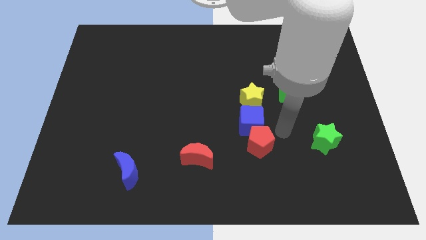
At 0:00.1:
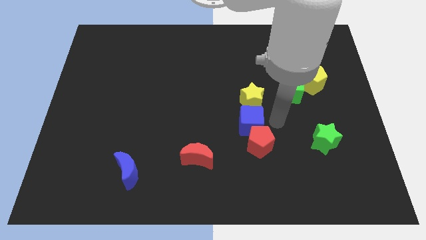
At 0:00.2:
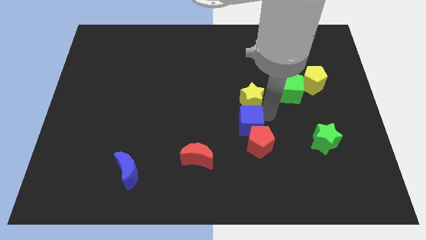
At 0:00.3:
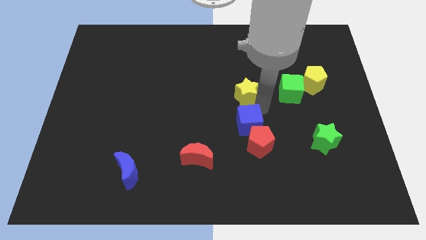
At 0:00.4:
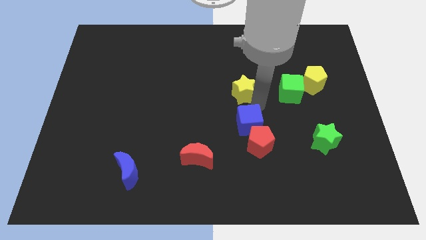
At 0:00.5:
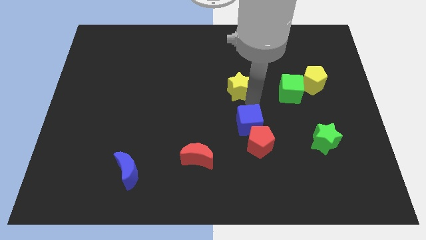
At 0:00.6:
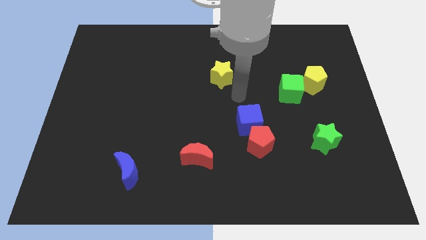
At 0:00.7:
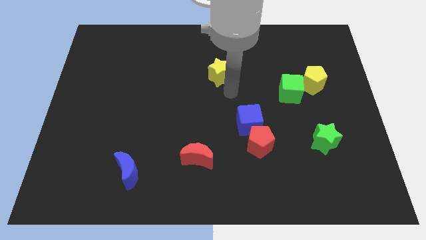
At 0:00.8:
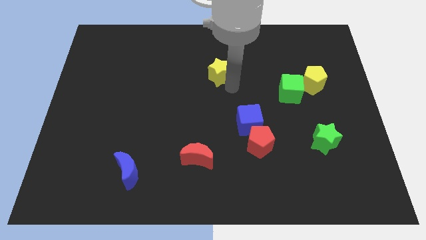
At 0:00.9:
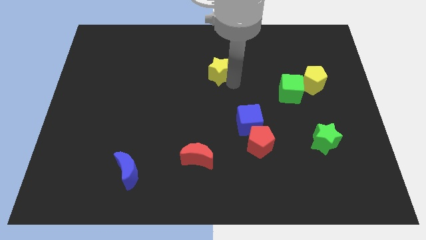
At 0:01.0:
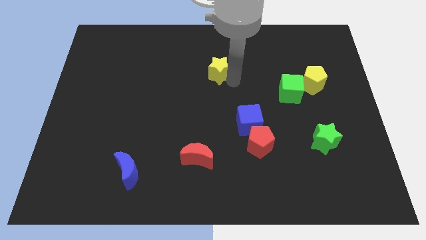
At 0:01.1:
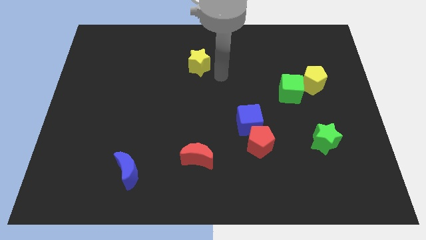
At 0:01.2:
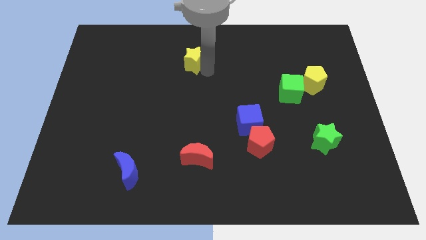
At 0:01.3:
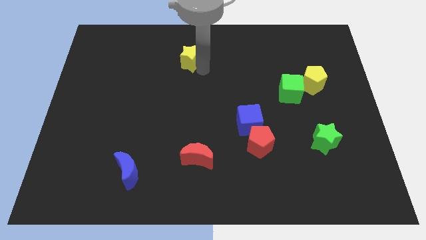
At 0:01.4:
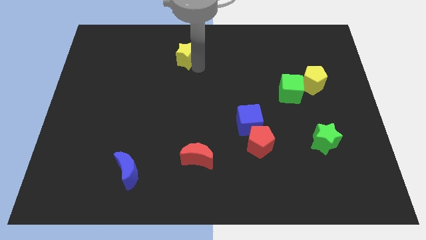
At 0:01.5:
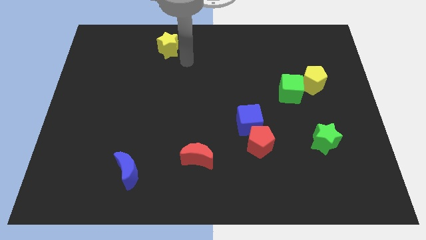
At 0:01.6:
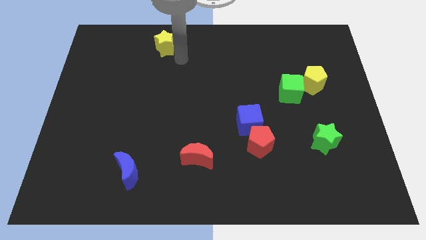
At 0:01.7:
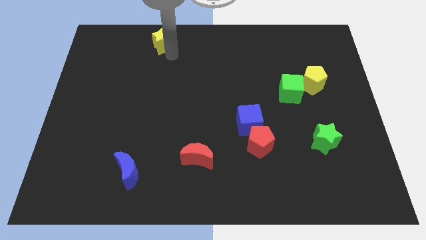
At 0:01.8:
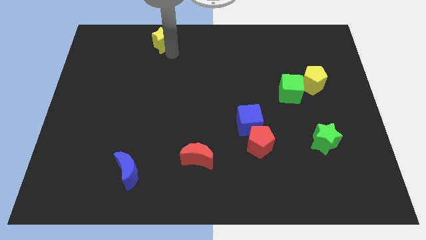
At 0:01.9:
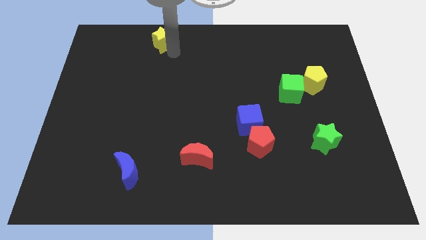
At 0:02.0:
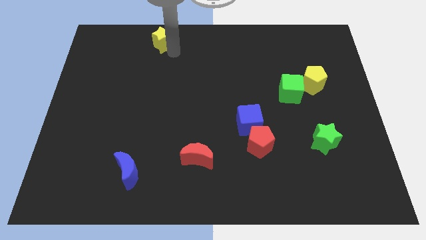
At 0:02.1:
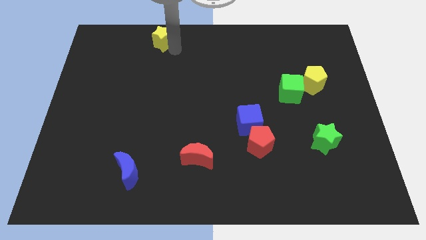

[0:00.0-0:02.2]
push the yellow star away from the blue cube

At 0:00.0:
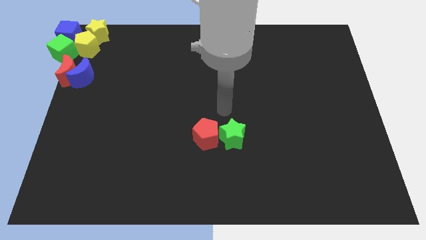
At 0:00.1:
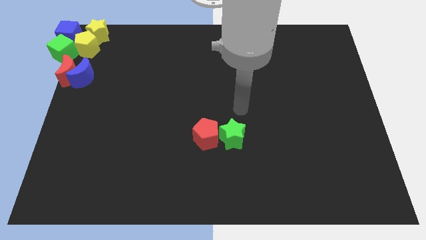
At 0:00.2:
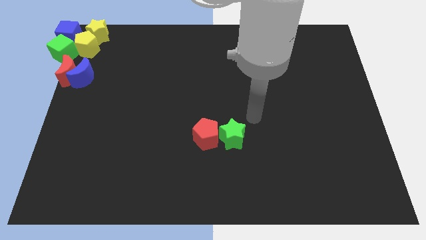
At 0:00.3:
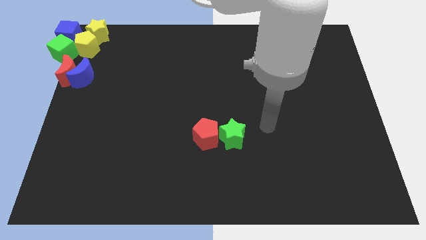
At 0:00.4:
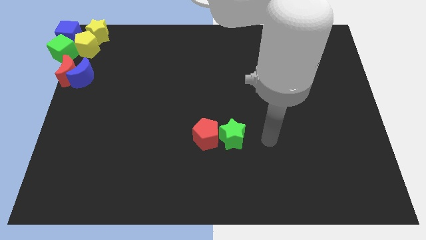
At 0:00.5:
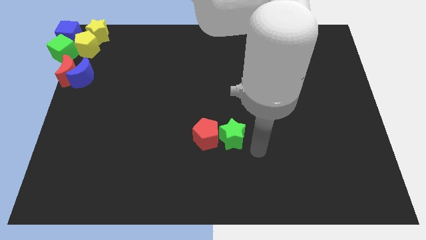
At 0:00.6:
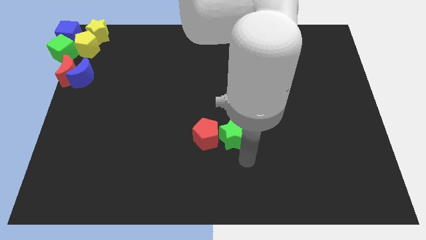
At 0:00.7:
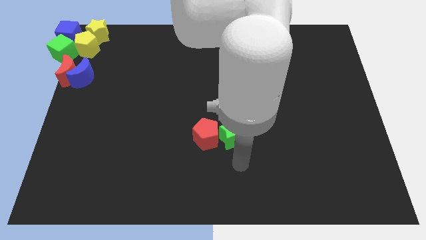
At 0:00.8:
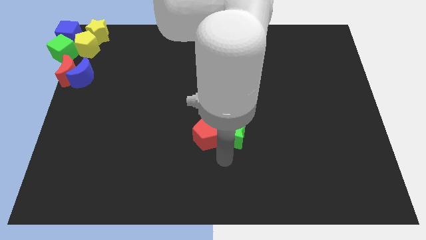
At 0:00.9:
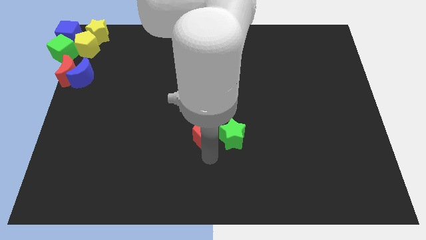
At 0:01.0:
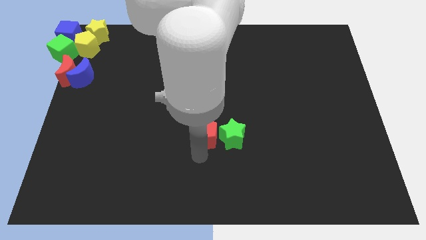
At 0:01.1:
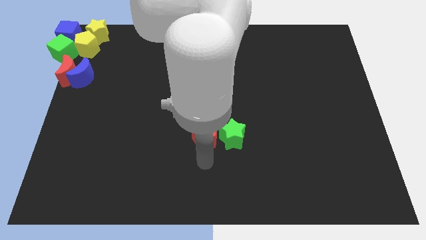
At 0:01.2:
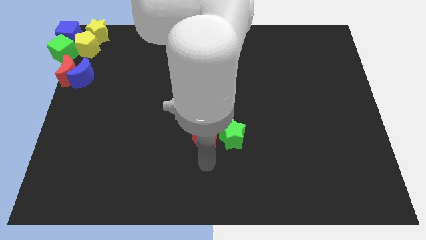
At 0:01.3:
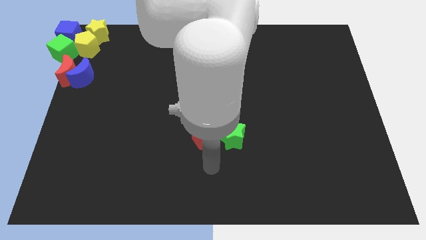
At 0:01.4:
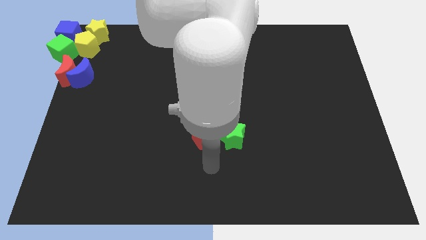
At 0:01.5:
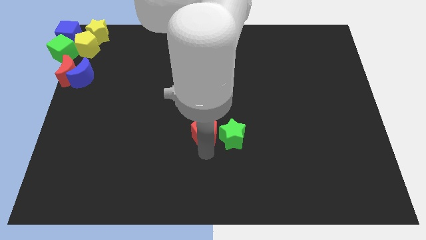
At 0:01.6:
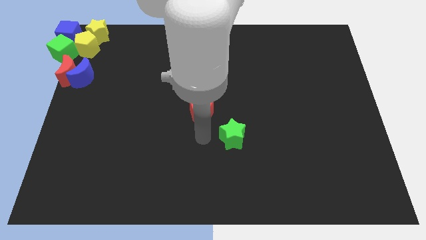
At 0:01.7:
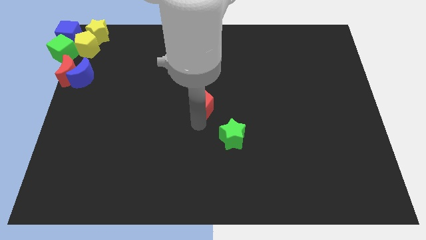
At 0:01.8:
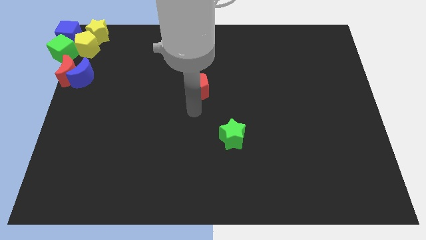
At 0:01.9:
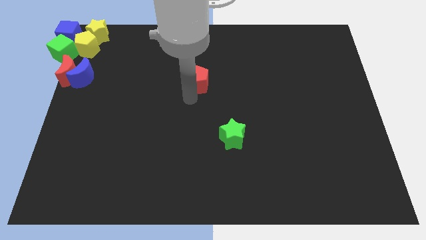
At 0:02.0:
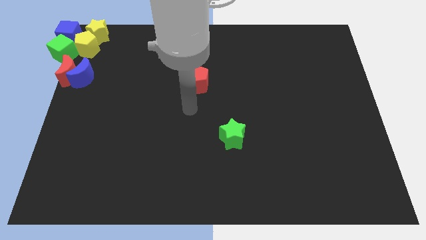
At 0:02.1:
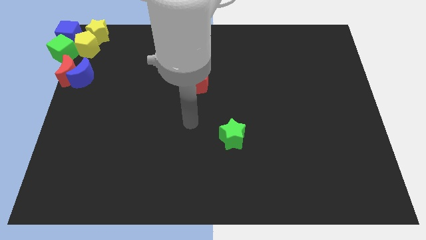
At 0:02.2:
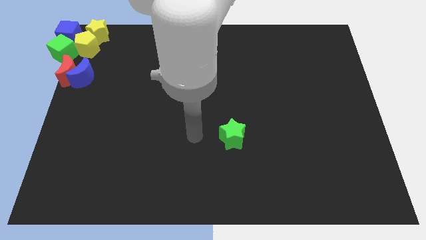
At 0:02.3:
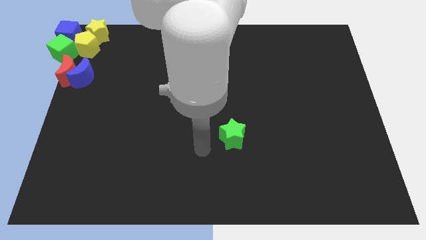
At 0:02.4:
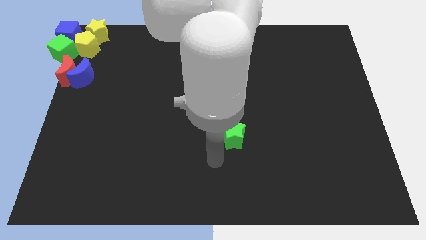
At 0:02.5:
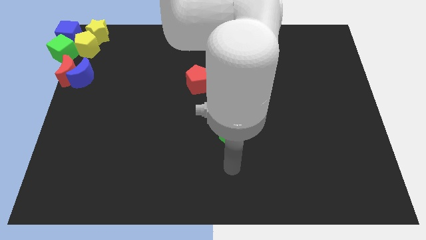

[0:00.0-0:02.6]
push the red pentagon towards the top center of the board

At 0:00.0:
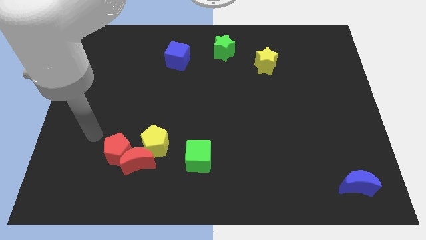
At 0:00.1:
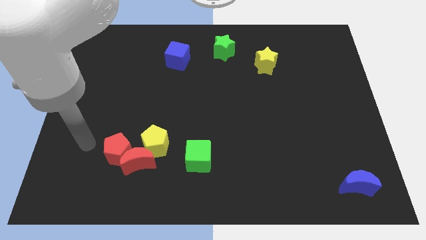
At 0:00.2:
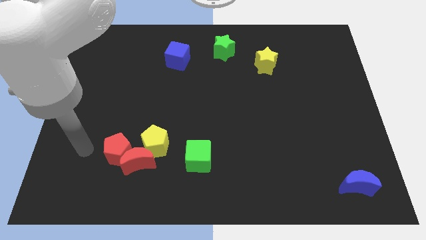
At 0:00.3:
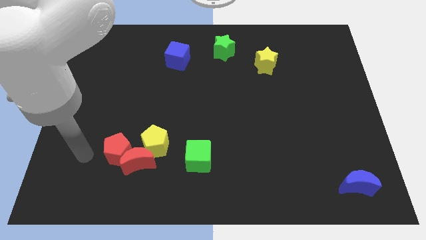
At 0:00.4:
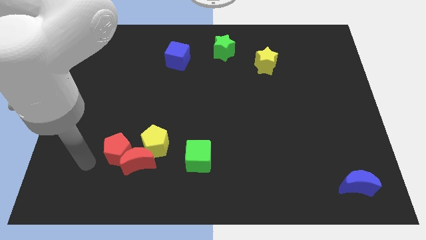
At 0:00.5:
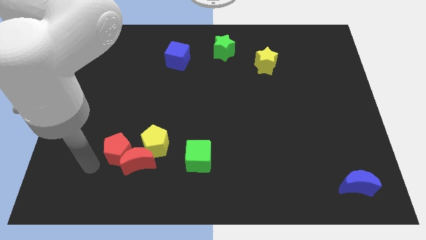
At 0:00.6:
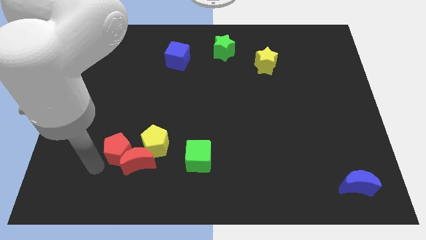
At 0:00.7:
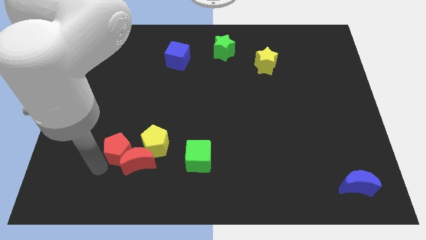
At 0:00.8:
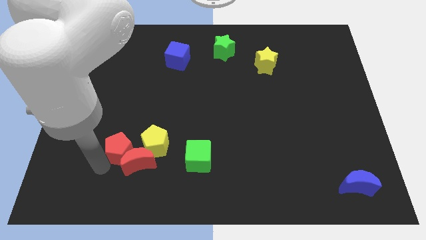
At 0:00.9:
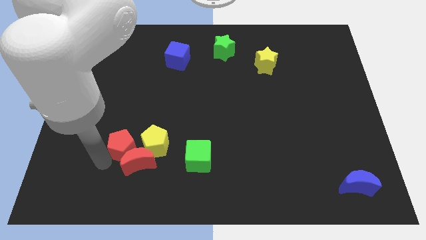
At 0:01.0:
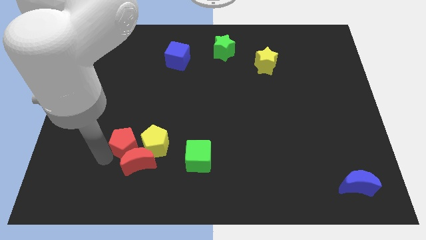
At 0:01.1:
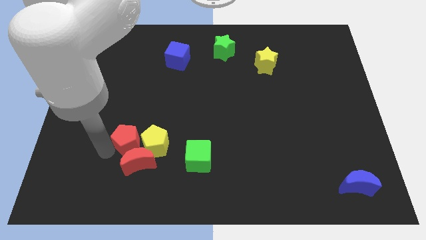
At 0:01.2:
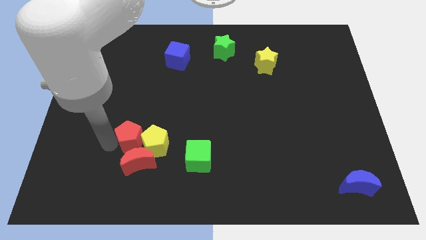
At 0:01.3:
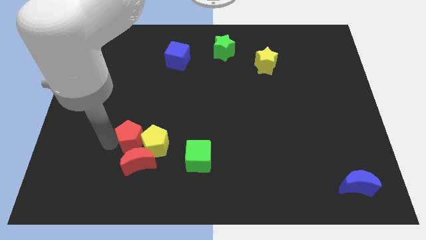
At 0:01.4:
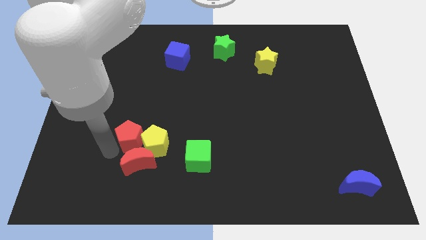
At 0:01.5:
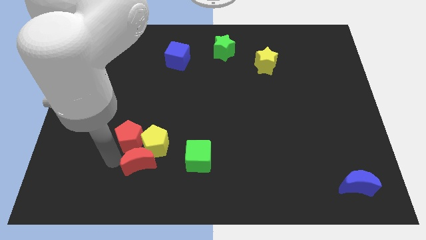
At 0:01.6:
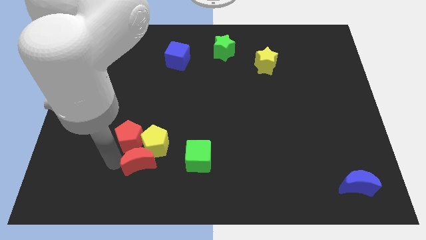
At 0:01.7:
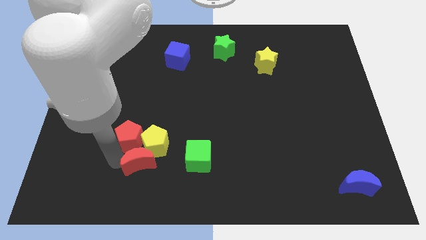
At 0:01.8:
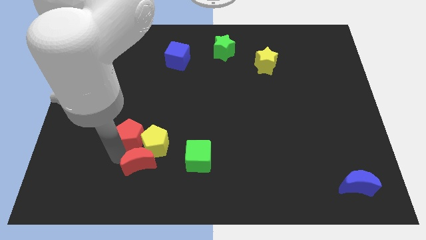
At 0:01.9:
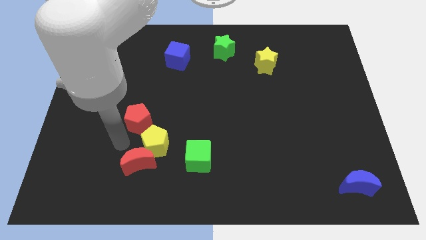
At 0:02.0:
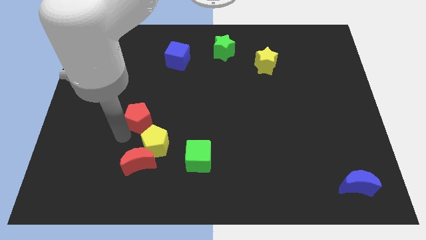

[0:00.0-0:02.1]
separate the red pentagon from the red crescent

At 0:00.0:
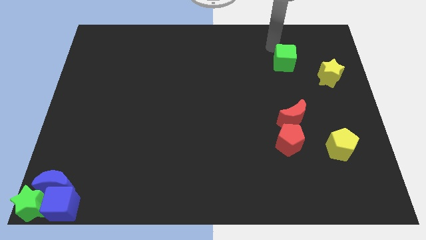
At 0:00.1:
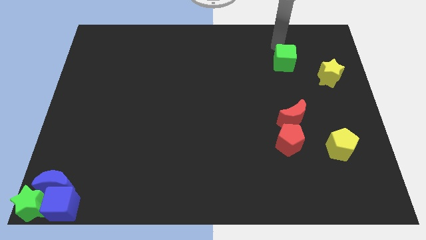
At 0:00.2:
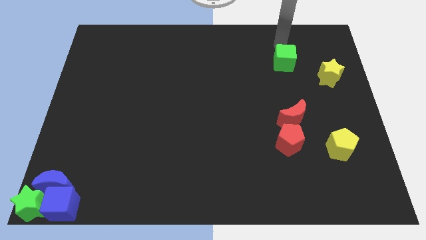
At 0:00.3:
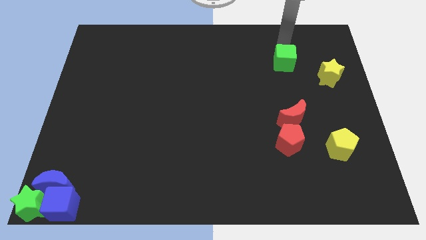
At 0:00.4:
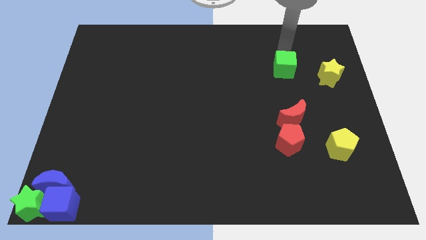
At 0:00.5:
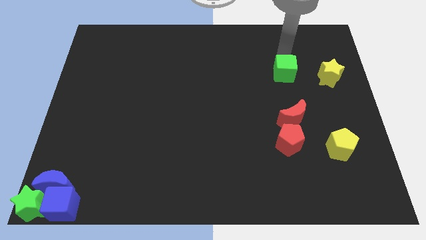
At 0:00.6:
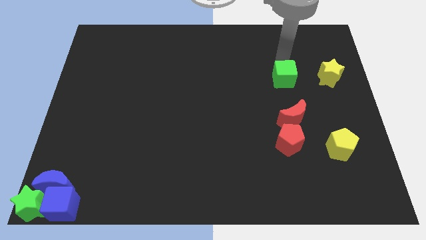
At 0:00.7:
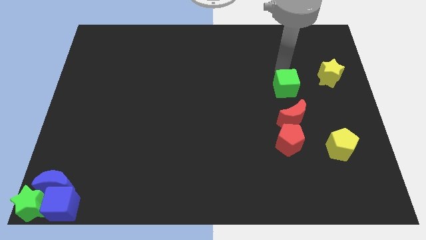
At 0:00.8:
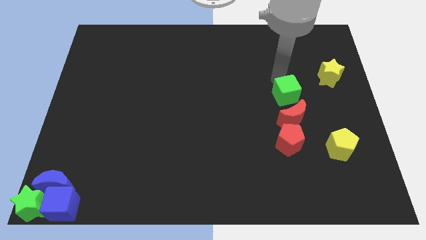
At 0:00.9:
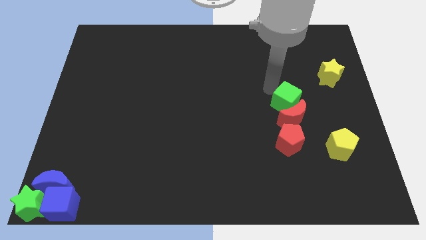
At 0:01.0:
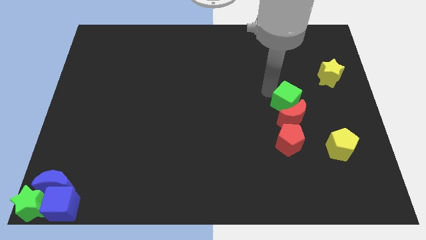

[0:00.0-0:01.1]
place the green cube to the top of the red crescent

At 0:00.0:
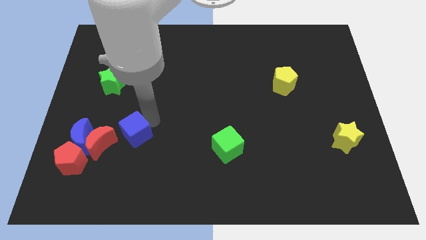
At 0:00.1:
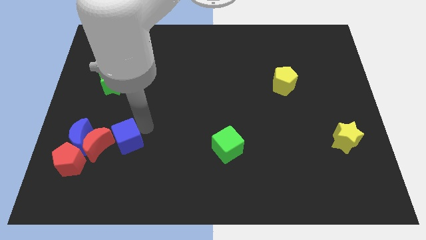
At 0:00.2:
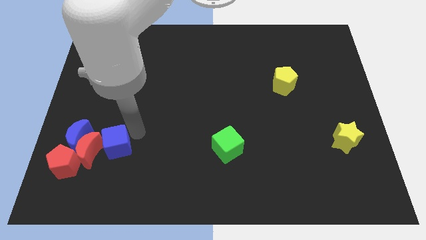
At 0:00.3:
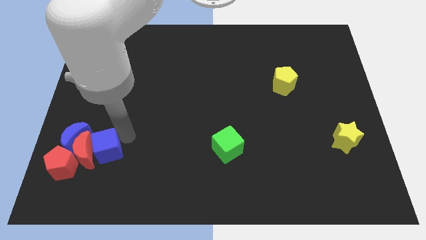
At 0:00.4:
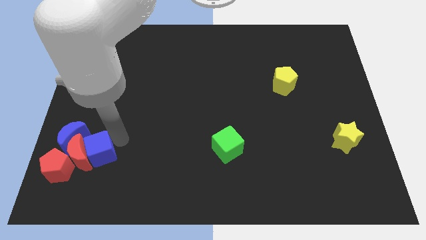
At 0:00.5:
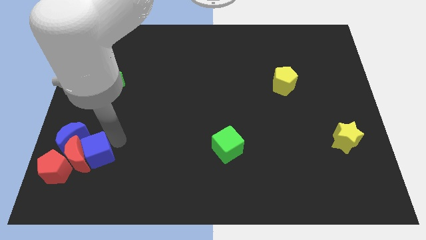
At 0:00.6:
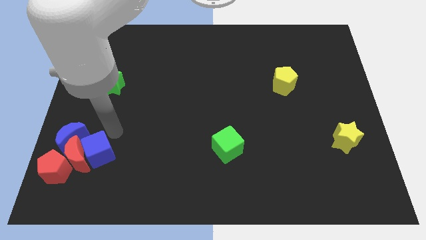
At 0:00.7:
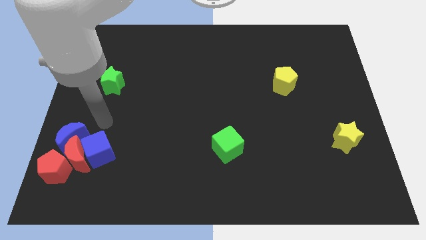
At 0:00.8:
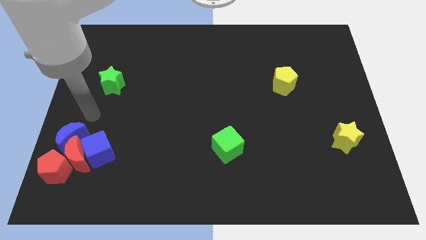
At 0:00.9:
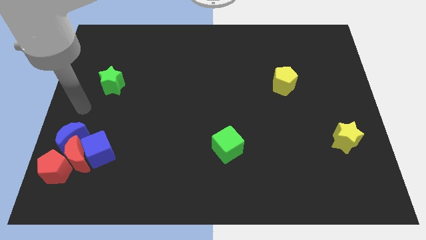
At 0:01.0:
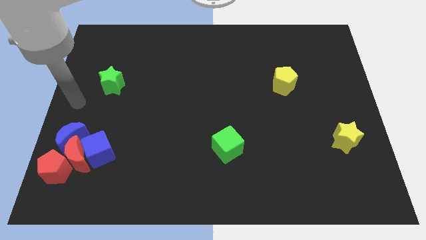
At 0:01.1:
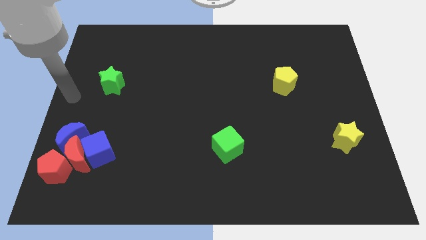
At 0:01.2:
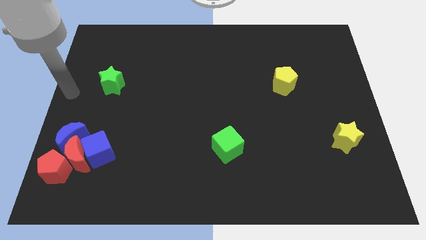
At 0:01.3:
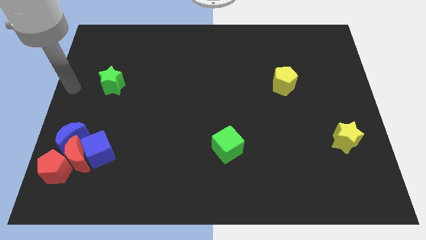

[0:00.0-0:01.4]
push the group of red and blue blocks to the bottom left side of the board
